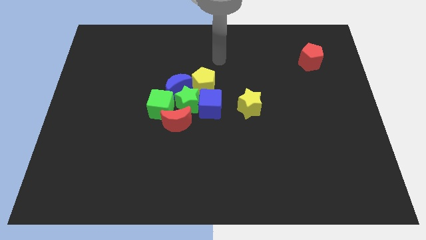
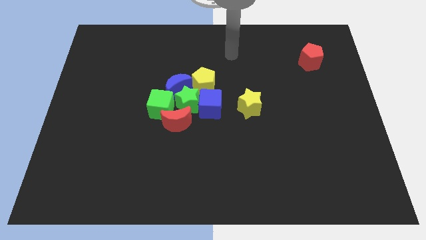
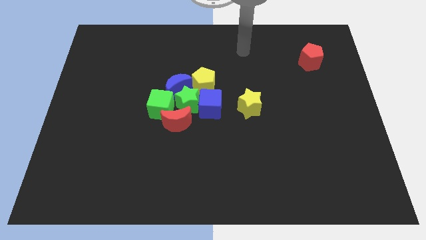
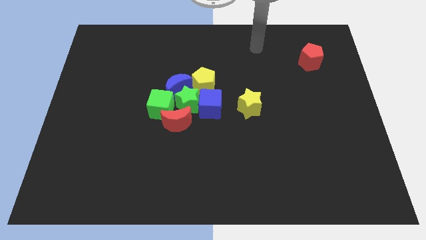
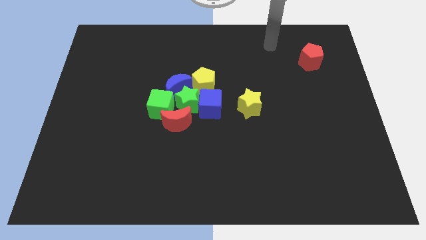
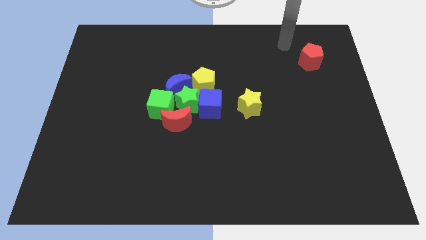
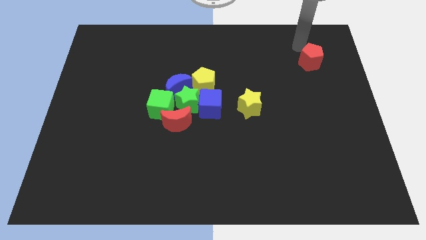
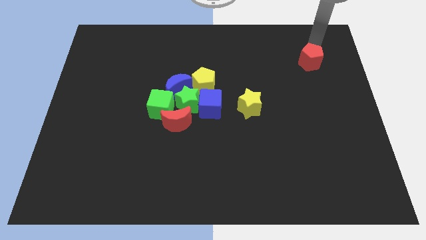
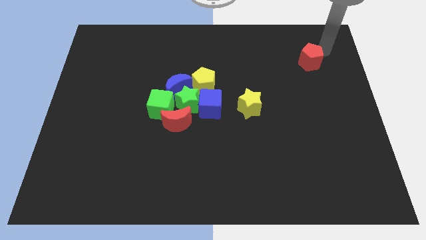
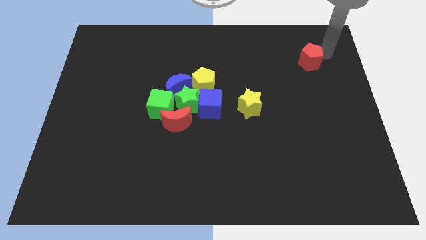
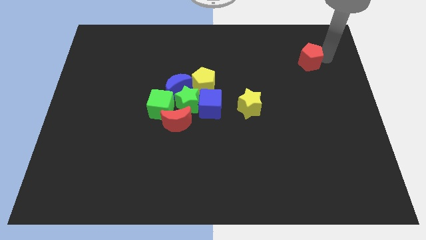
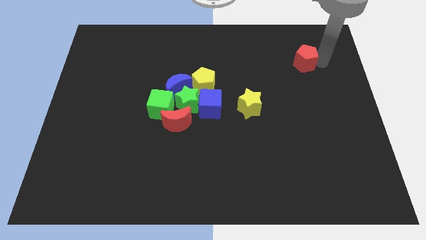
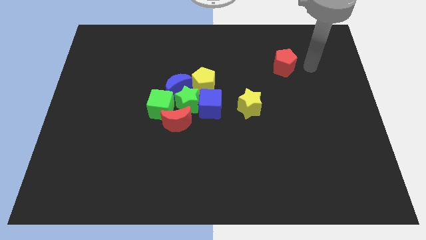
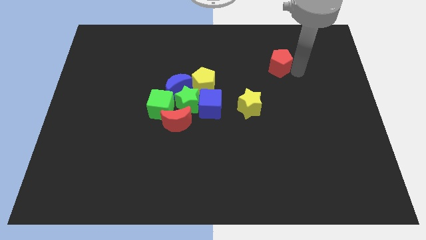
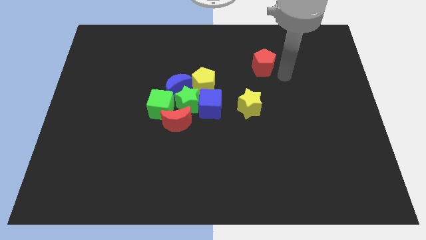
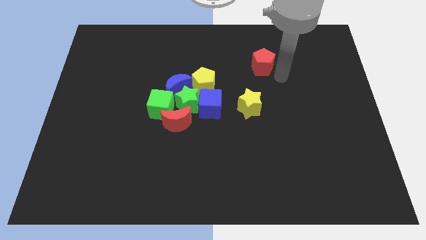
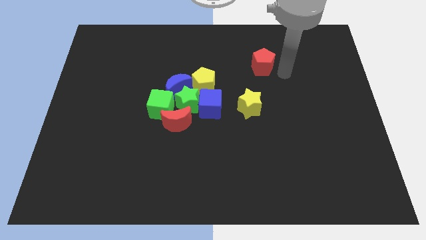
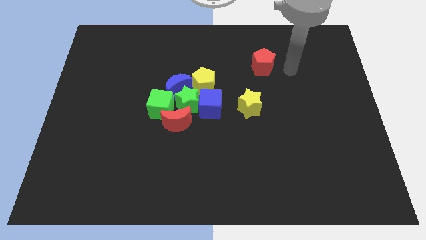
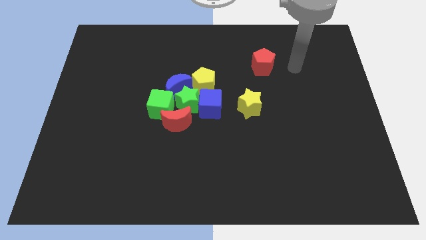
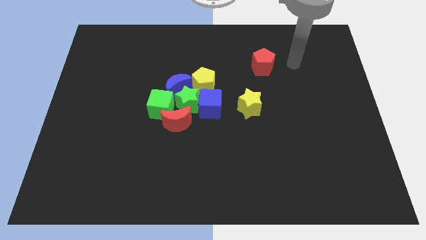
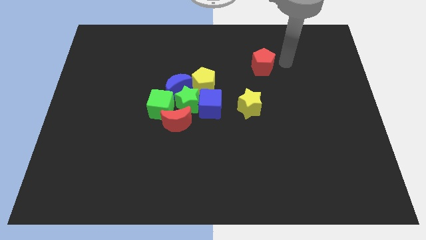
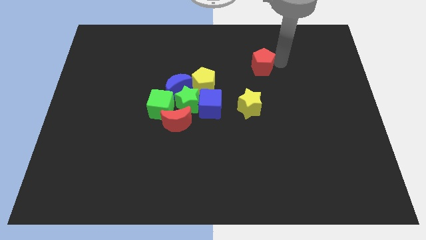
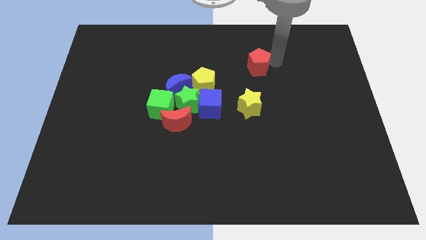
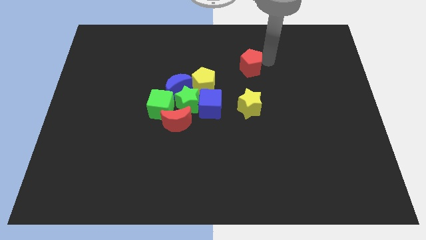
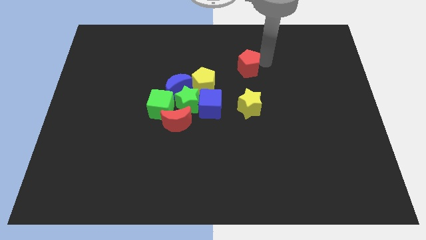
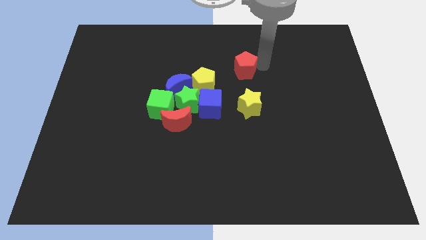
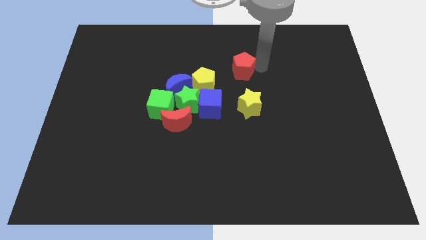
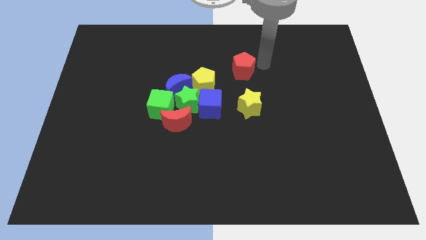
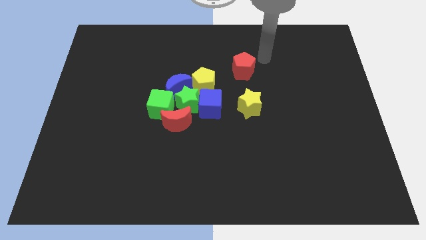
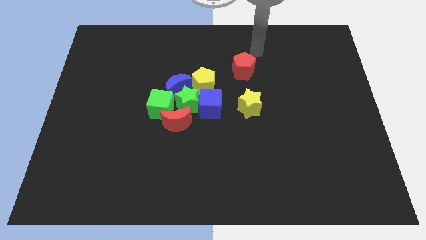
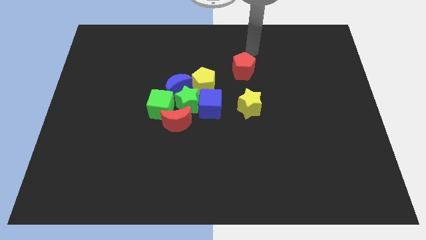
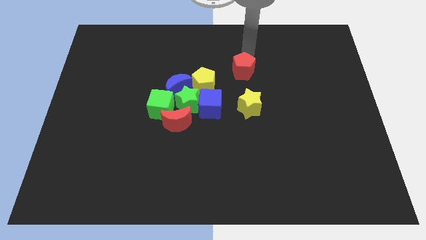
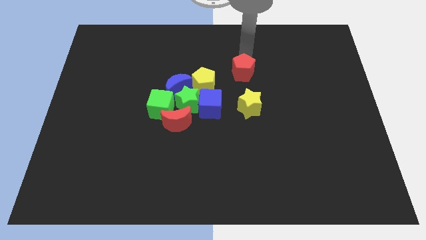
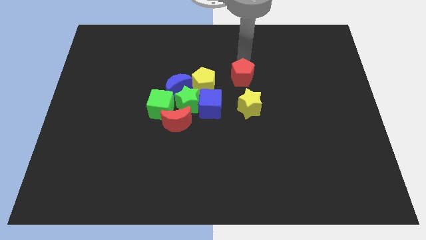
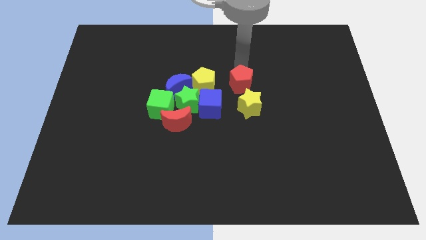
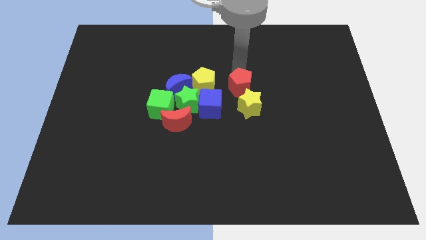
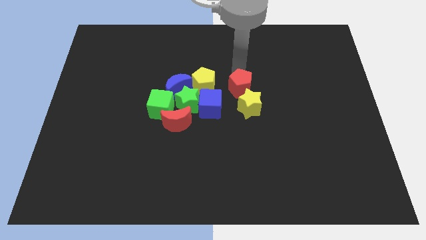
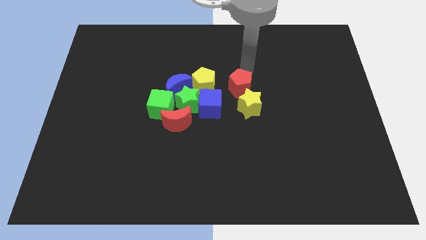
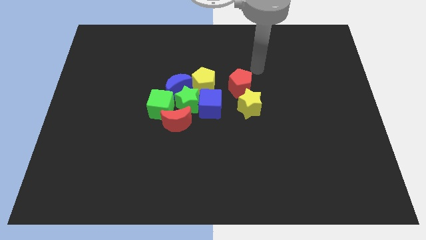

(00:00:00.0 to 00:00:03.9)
move the red pentagon to the top of the yellow star

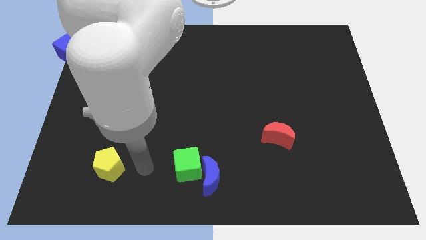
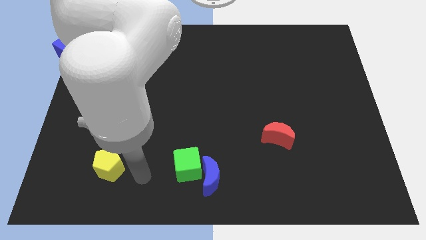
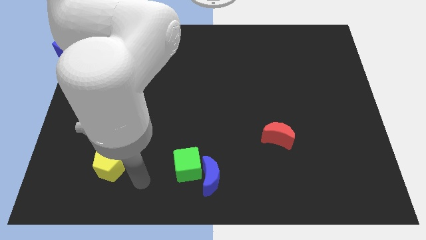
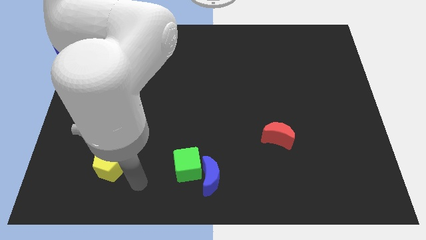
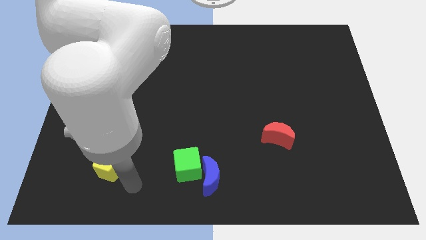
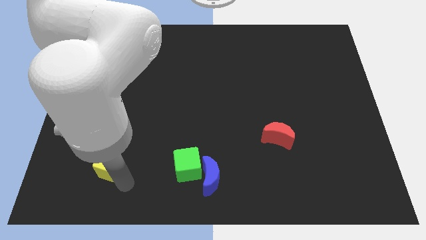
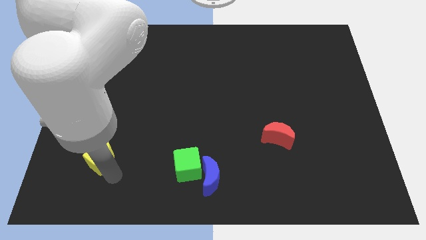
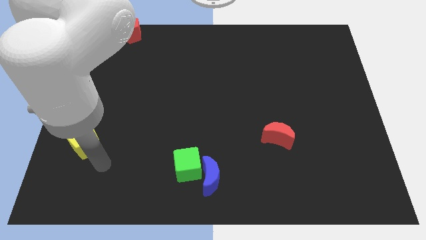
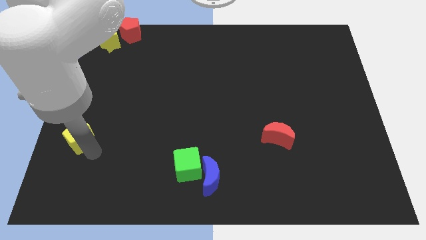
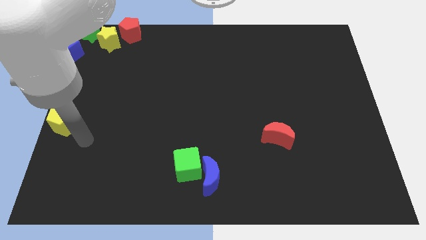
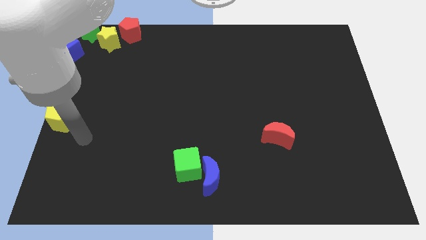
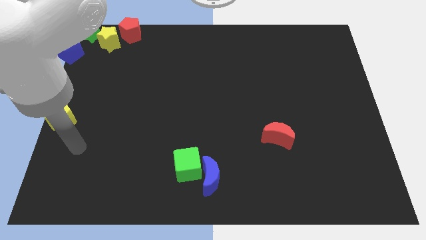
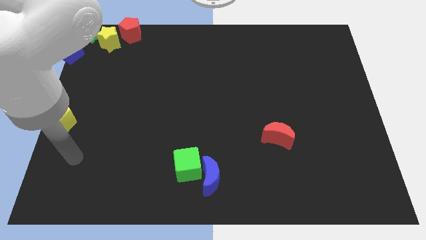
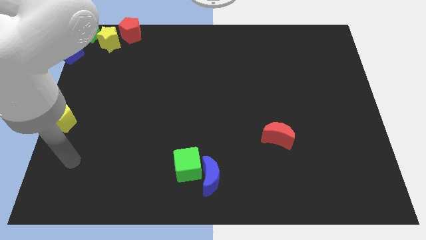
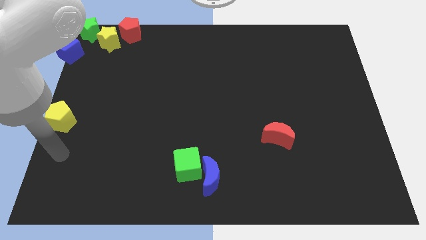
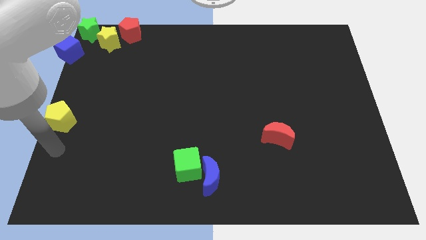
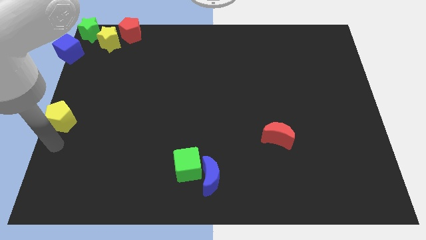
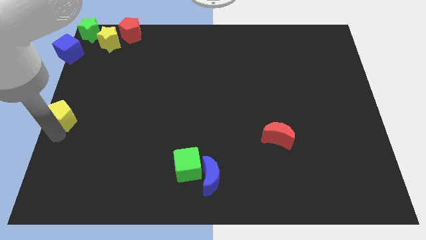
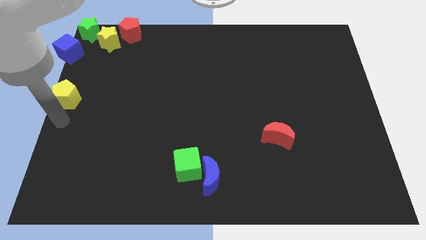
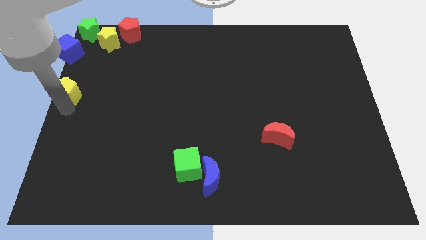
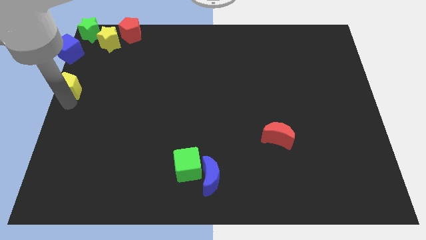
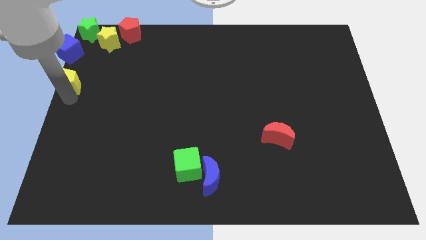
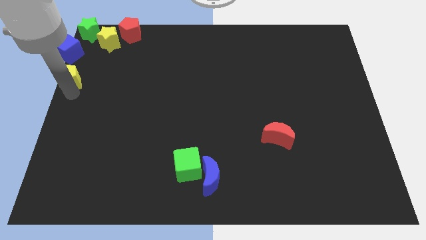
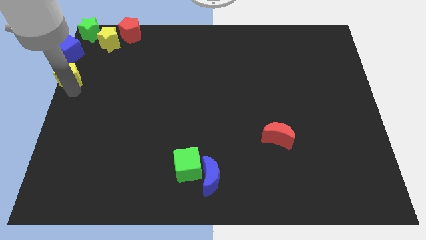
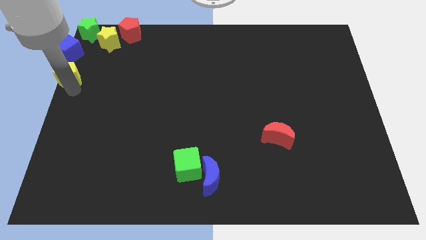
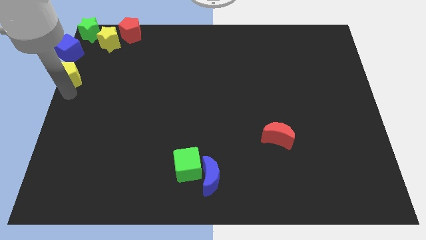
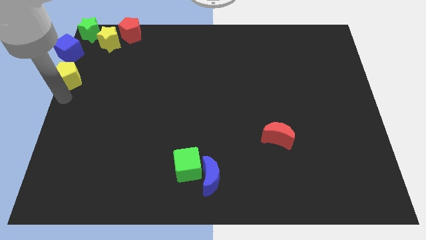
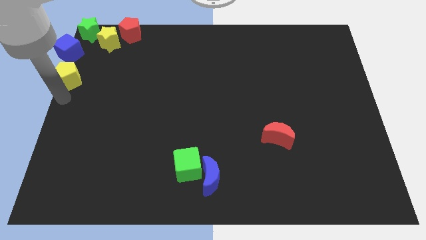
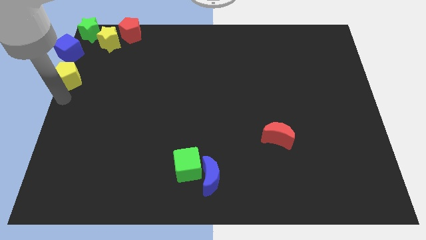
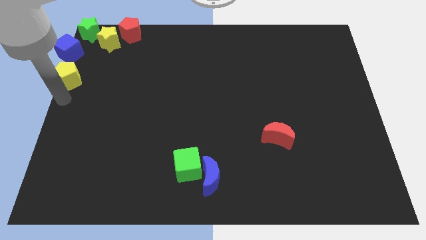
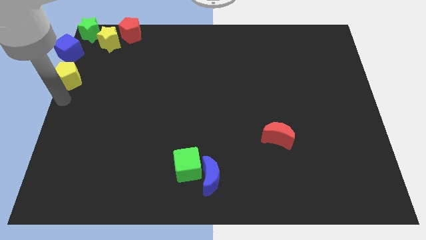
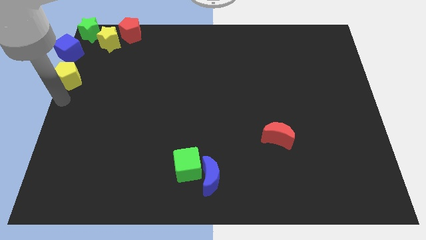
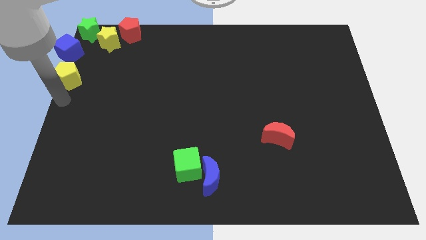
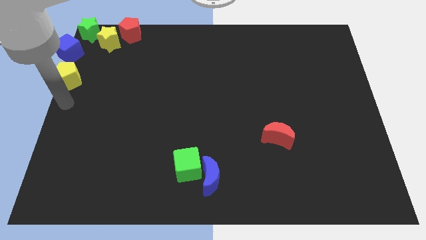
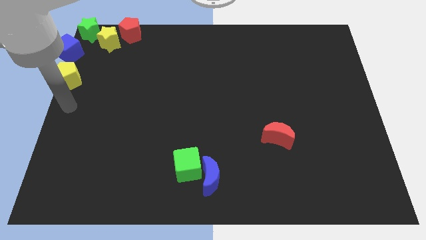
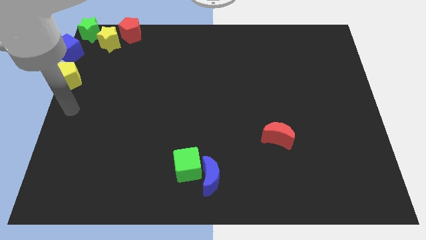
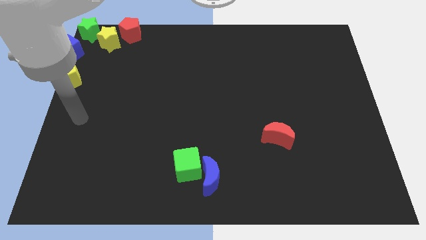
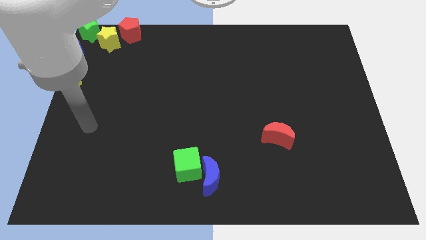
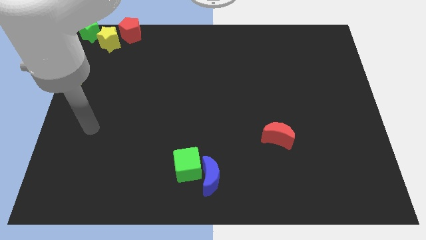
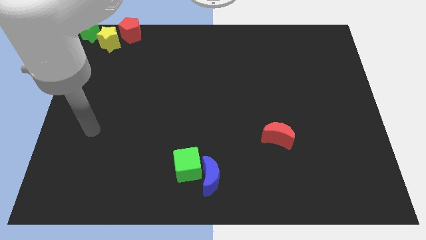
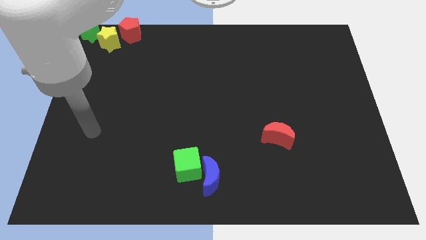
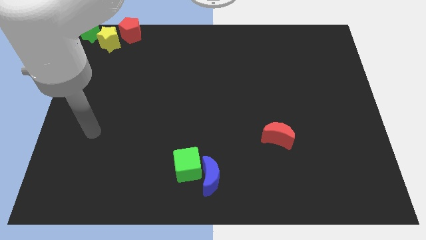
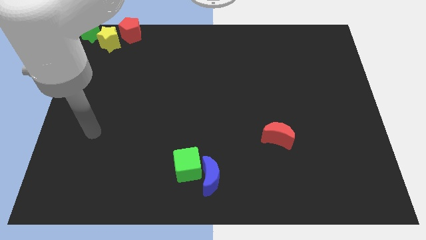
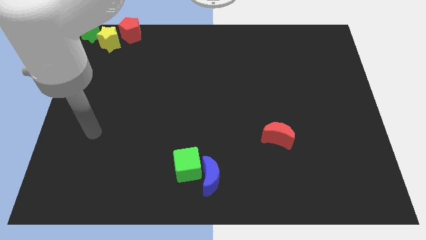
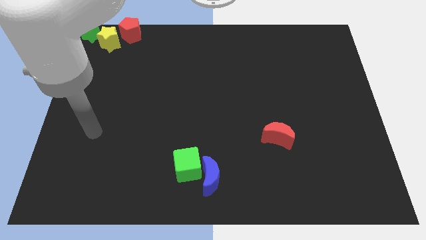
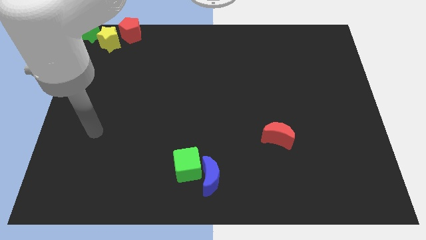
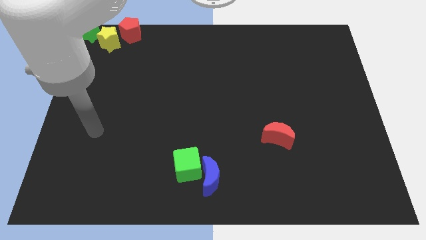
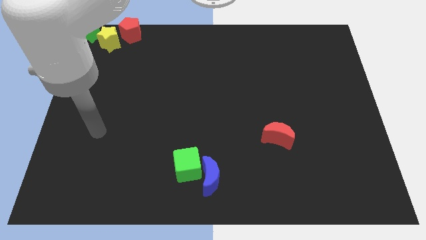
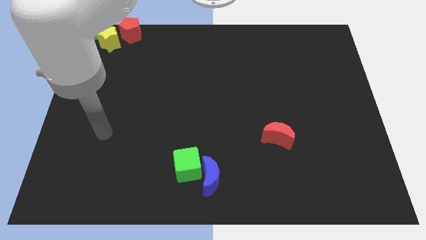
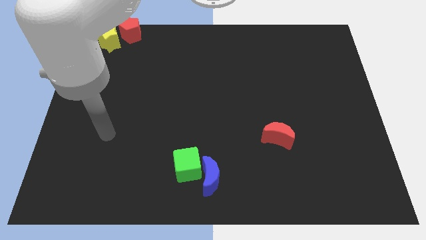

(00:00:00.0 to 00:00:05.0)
slide the yellow pentagon towards top left side
